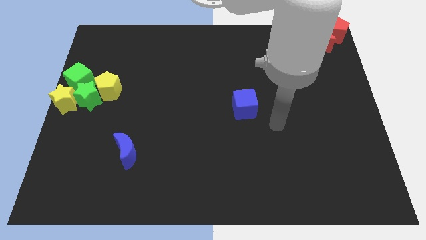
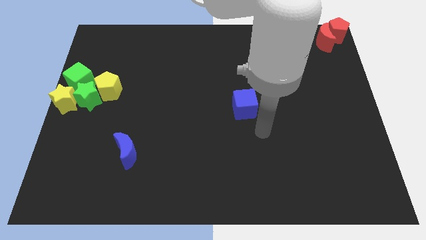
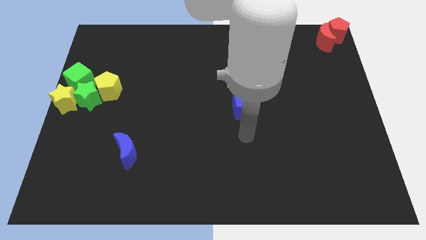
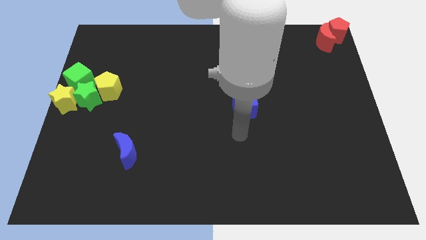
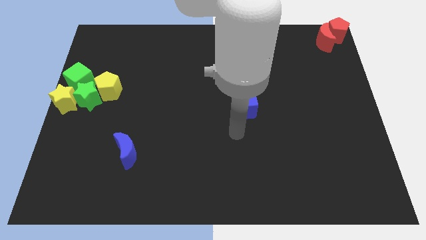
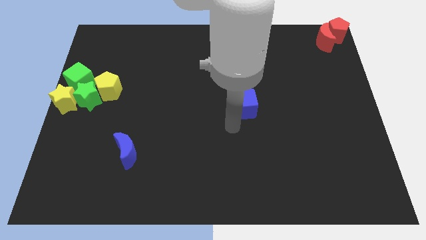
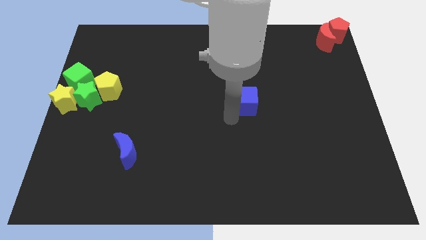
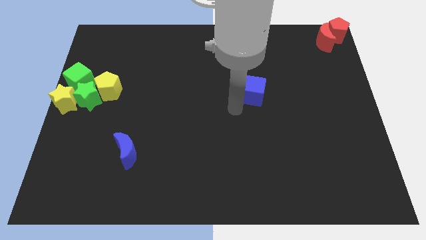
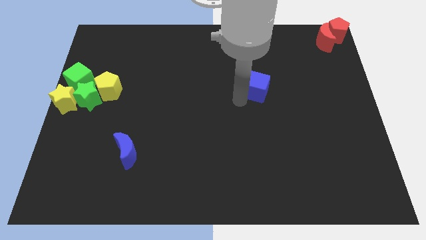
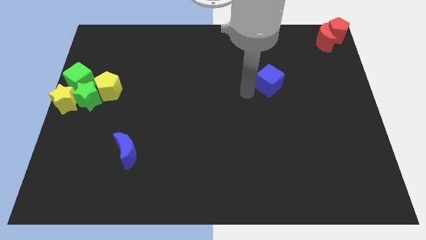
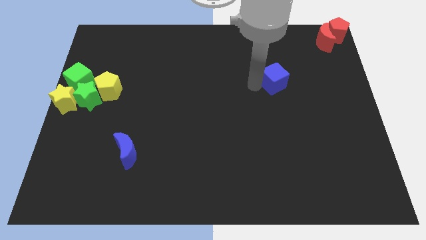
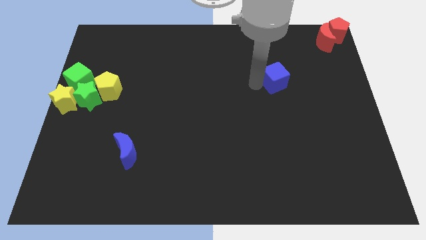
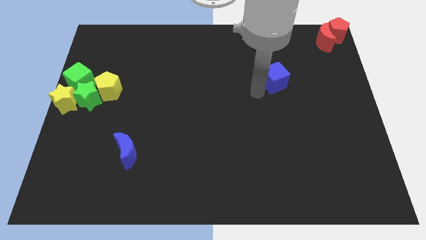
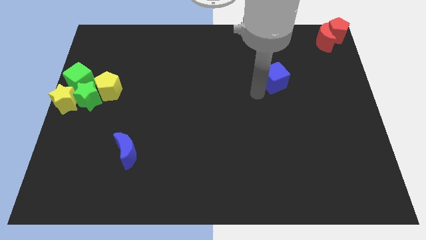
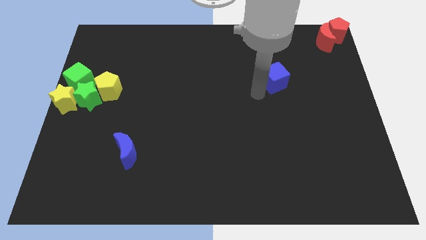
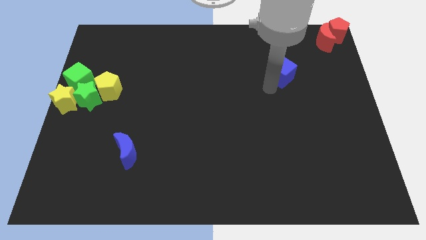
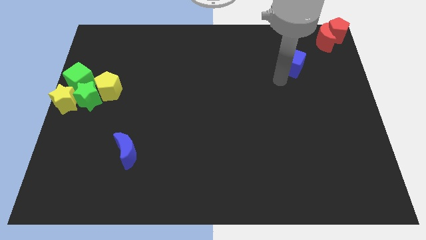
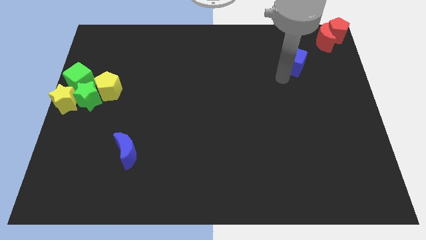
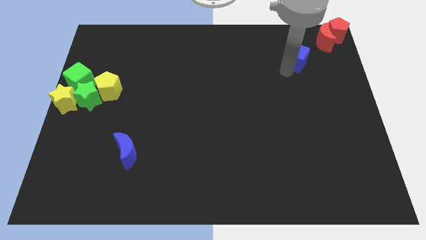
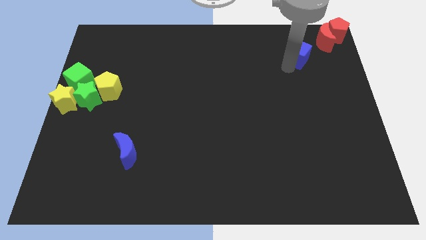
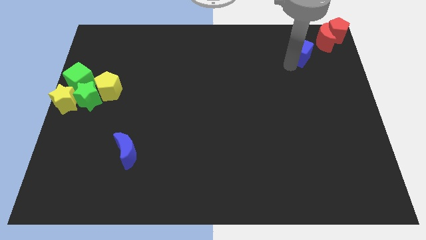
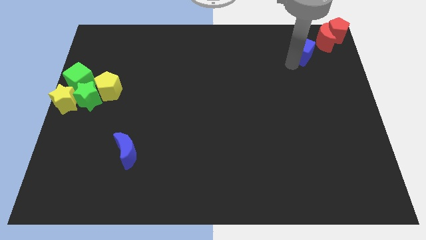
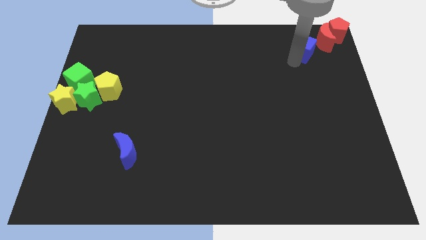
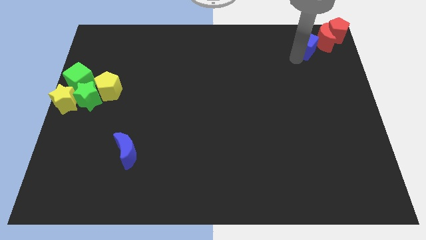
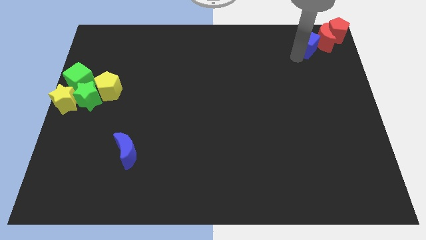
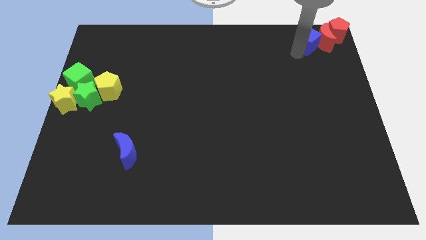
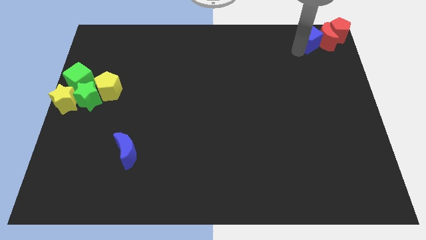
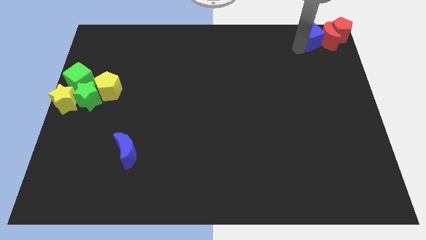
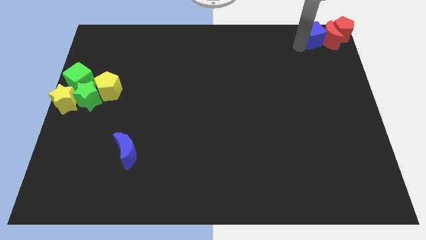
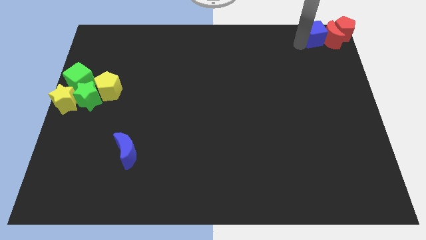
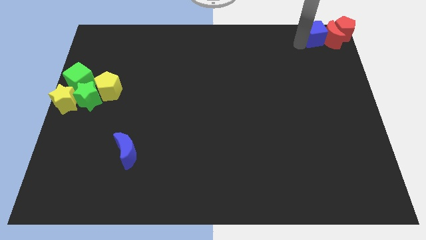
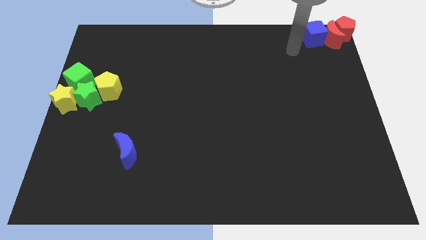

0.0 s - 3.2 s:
move the blue cube to the left side of the red pentagon

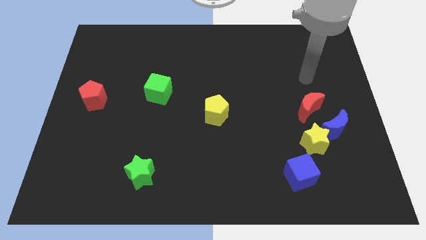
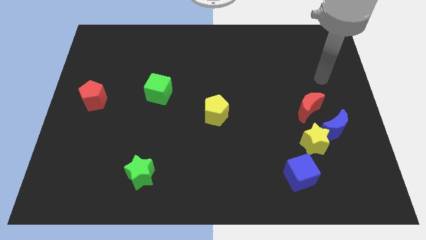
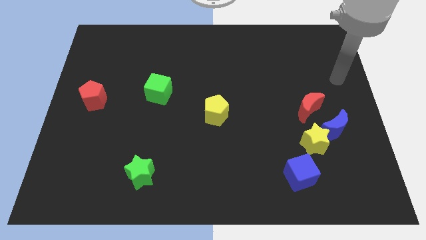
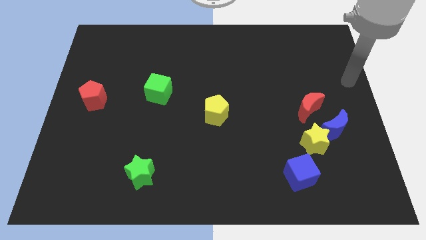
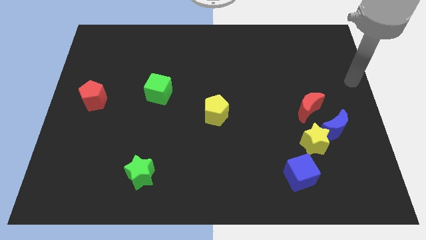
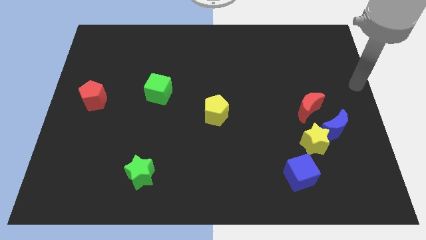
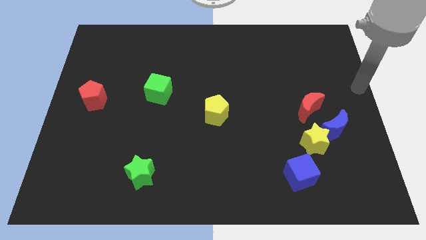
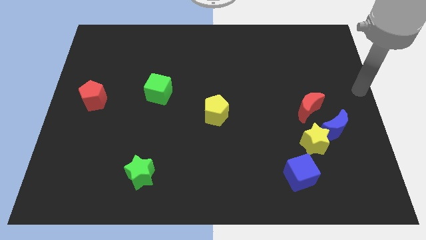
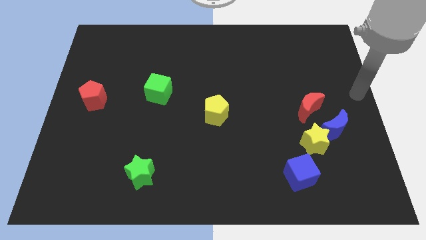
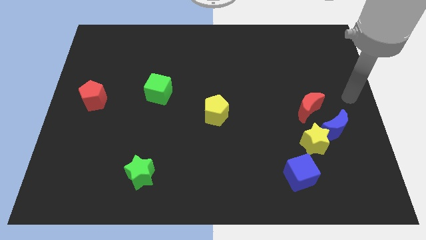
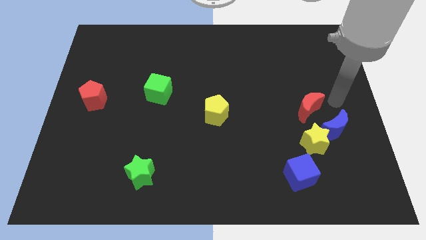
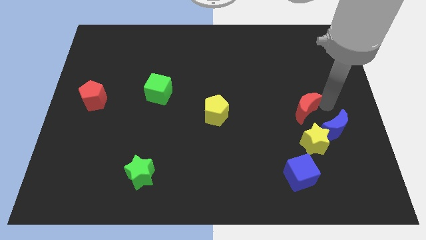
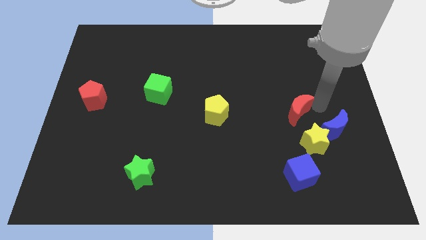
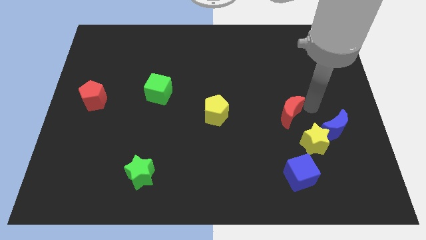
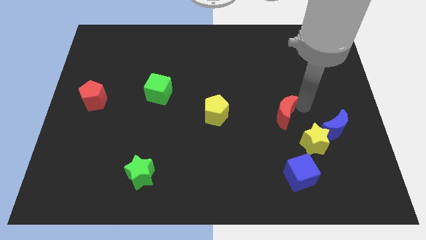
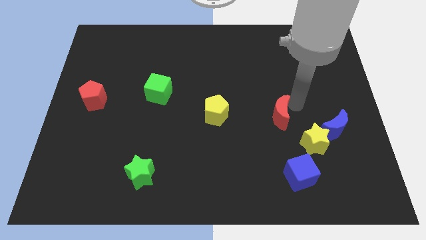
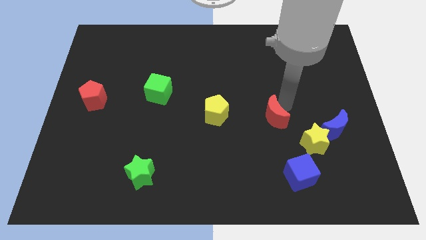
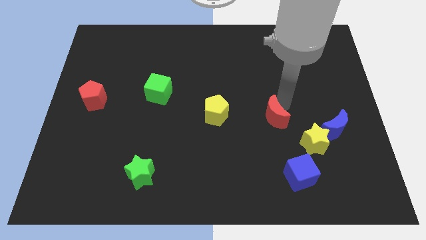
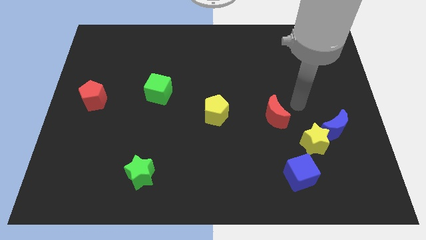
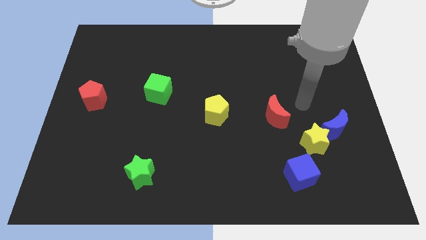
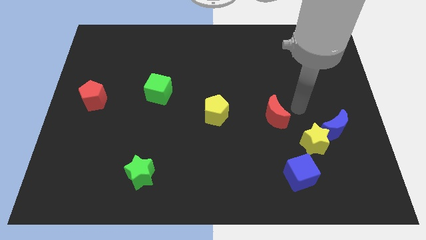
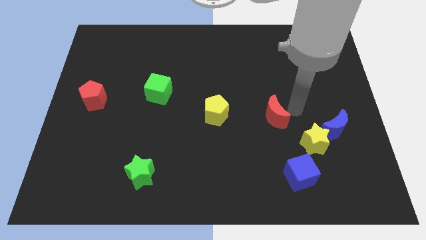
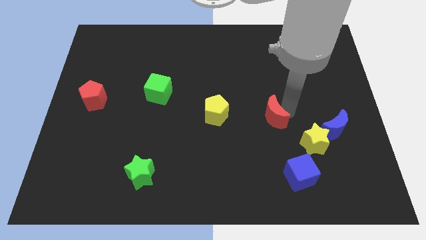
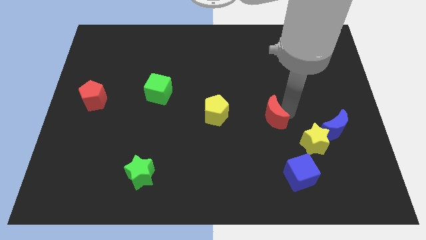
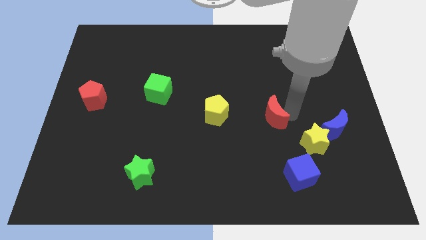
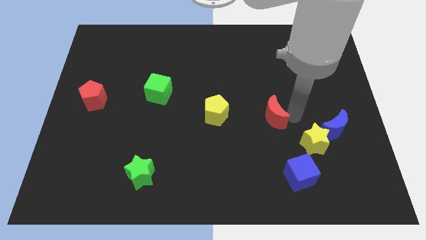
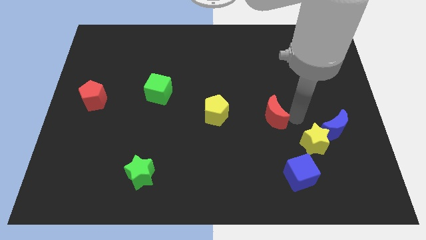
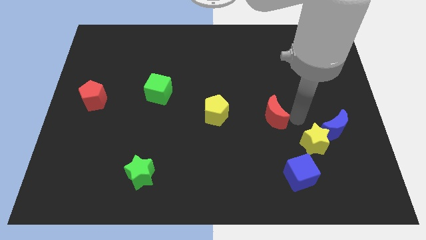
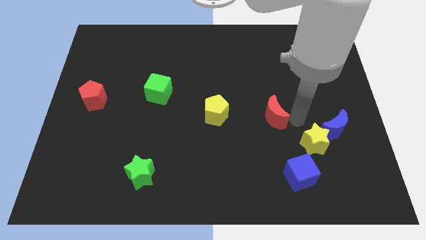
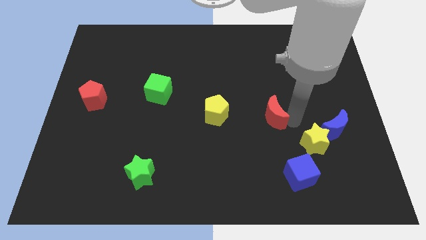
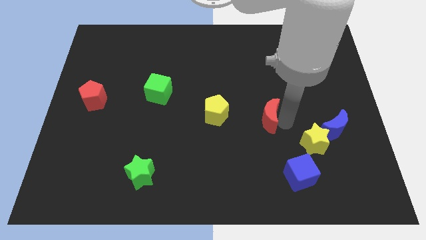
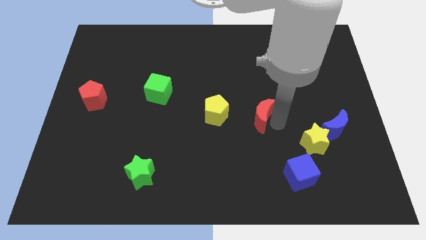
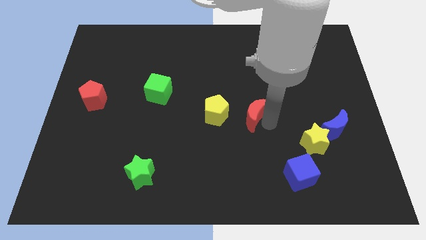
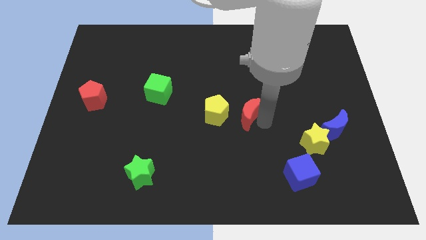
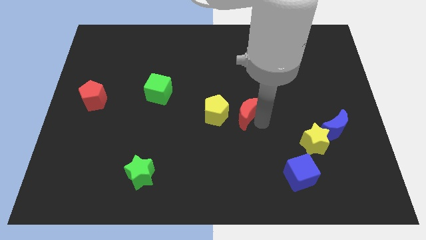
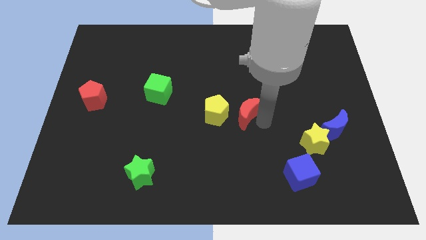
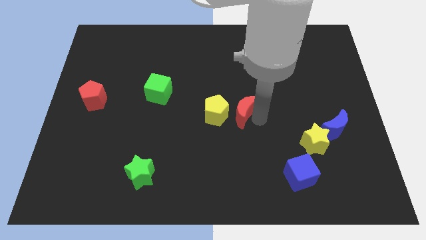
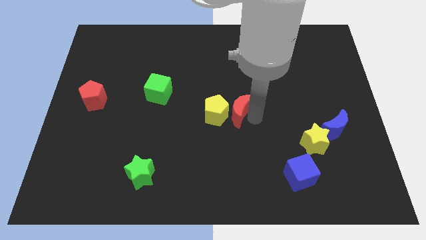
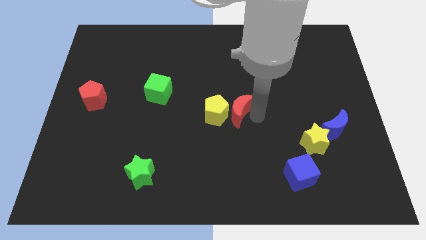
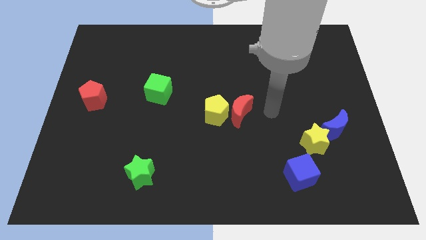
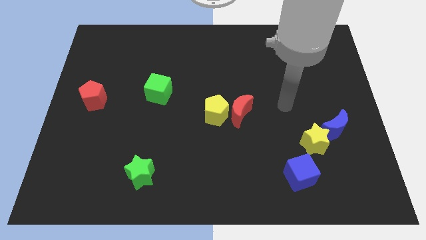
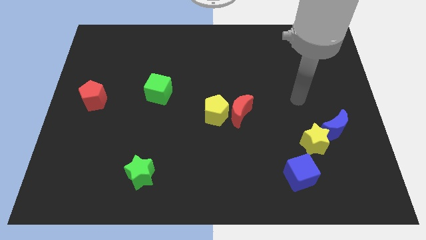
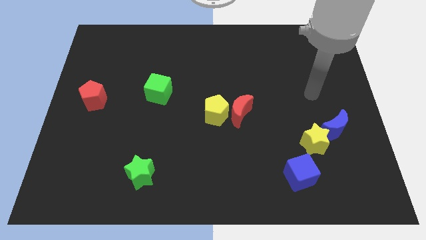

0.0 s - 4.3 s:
move the red moon to the right side of the yellow pentagon

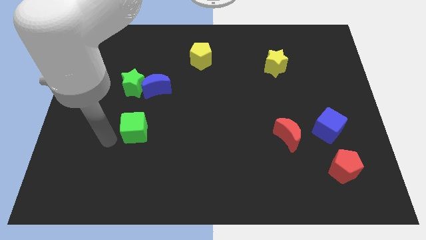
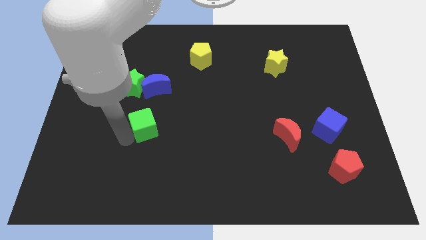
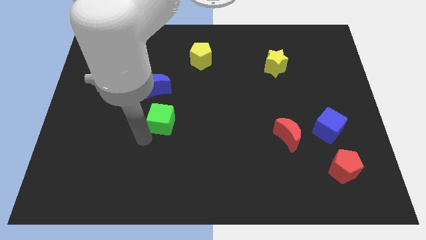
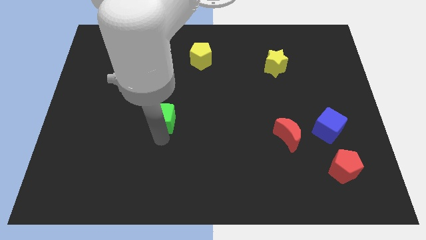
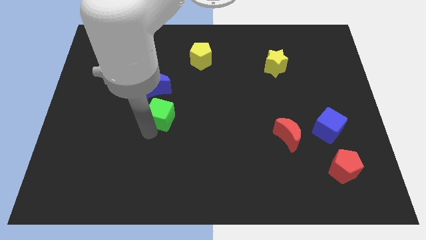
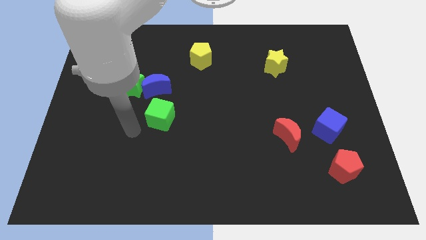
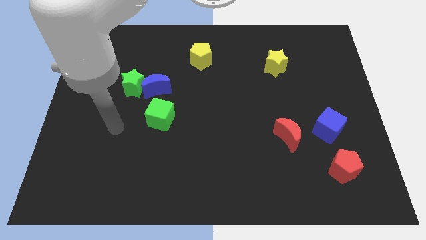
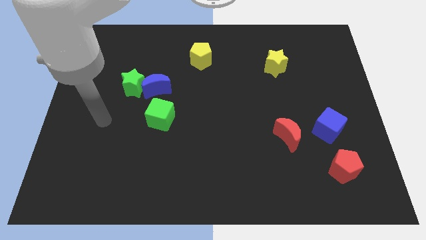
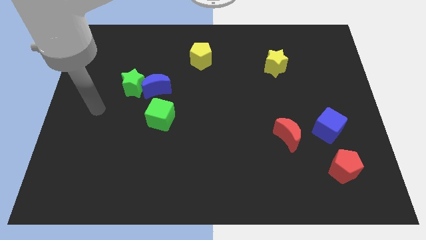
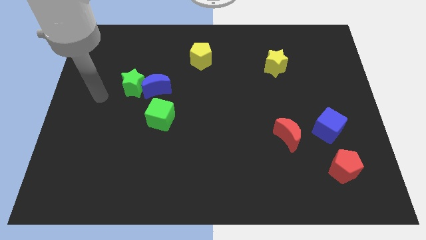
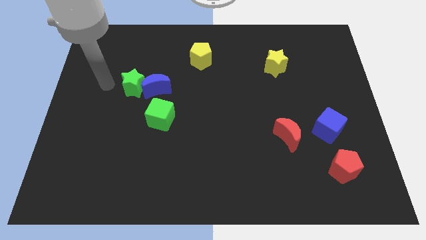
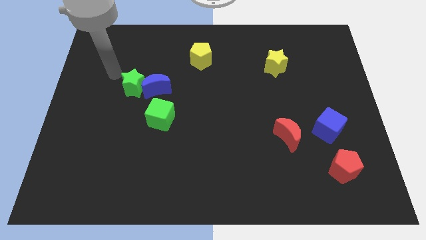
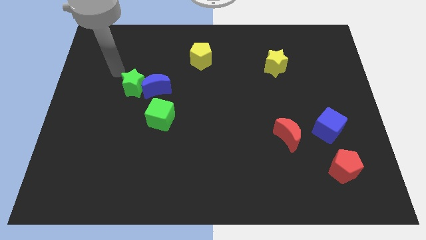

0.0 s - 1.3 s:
move the green cube to the bottom of the blue moon
